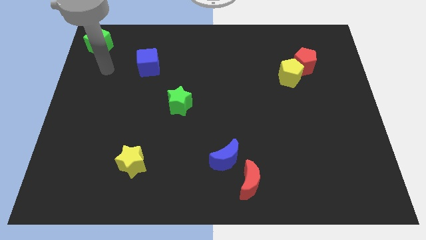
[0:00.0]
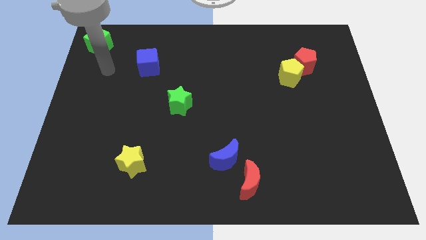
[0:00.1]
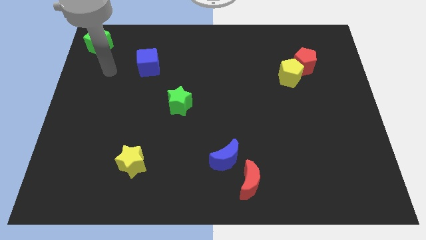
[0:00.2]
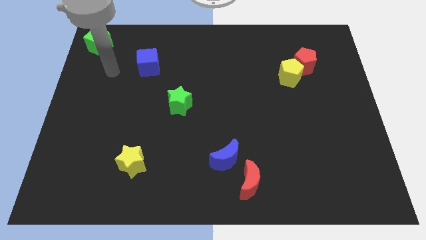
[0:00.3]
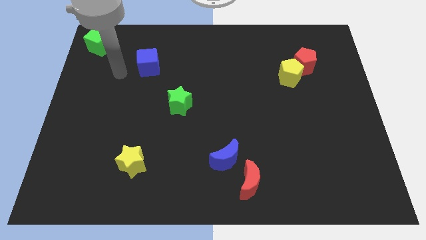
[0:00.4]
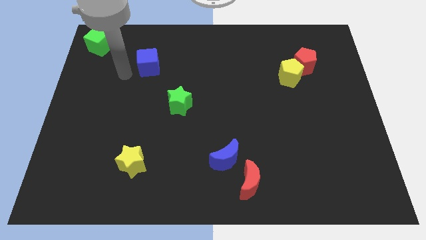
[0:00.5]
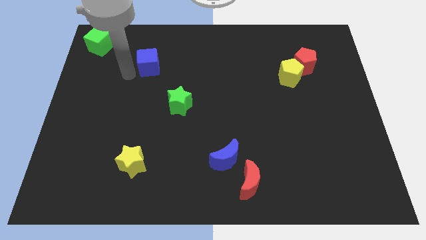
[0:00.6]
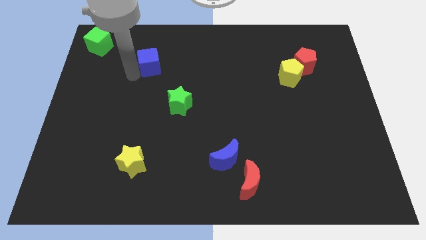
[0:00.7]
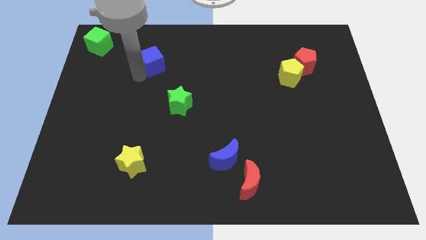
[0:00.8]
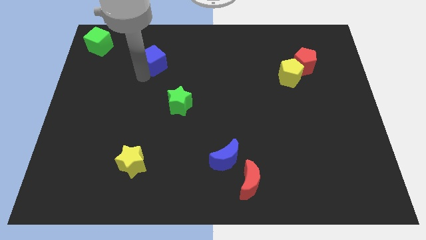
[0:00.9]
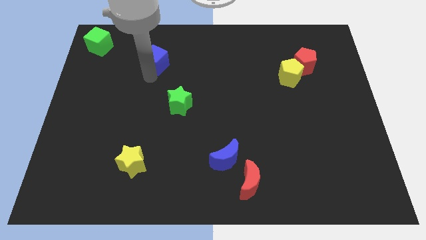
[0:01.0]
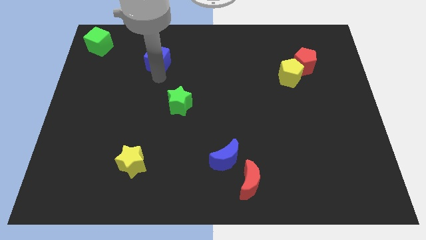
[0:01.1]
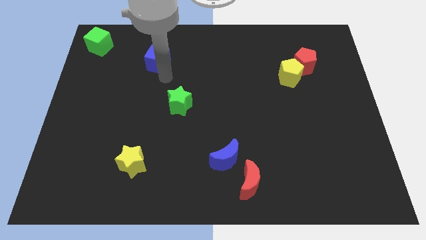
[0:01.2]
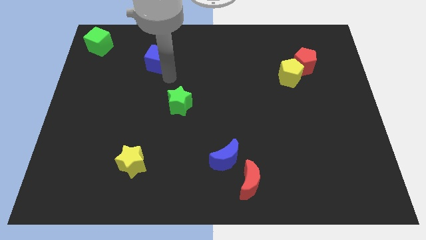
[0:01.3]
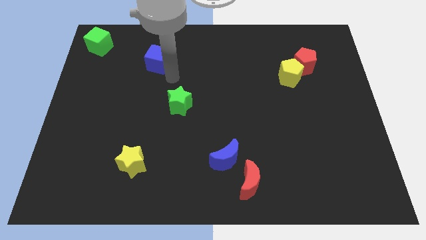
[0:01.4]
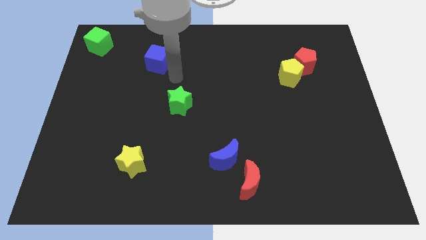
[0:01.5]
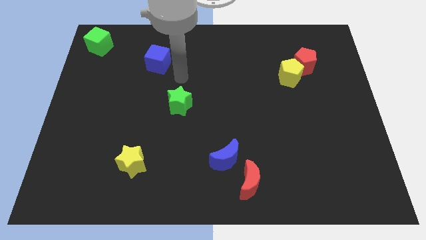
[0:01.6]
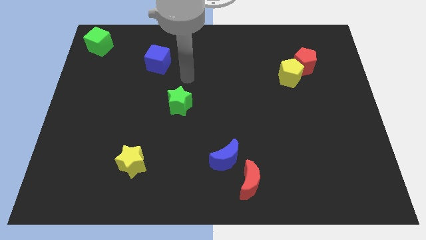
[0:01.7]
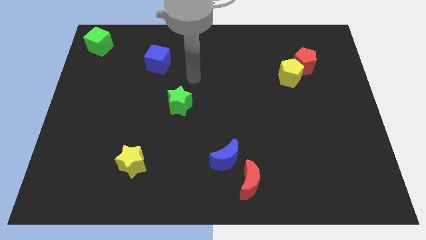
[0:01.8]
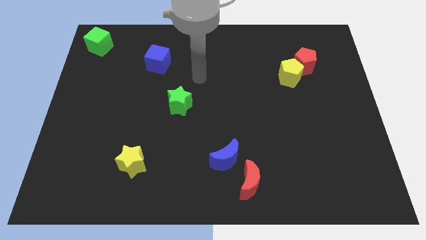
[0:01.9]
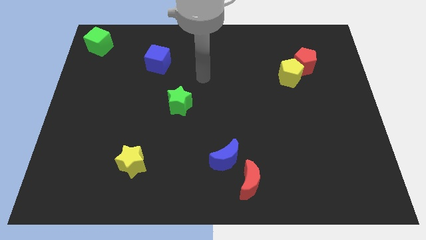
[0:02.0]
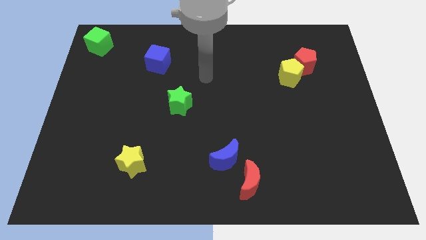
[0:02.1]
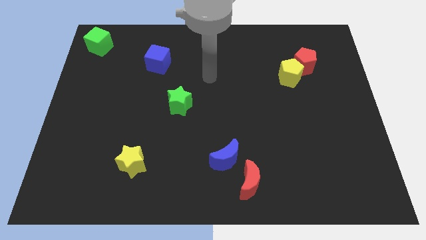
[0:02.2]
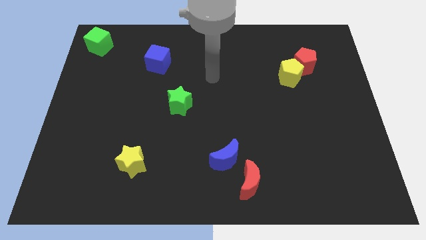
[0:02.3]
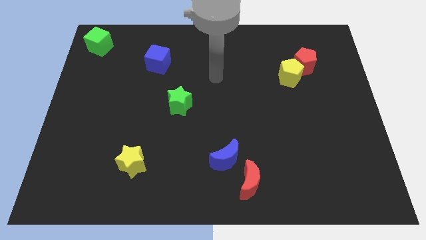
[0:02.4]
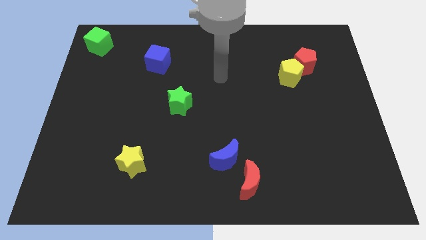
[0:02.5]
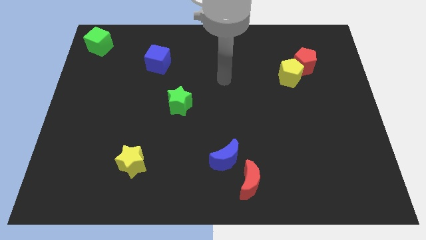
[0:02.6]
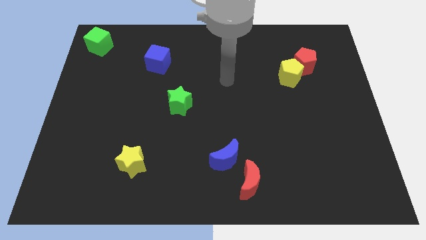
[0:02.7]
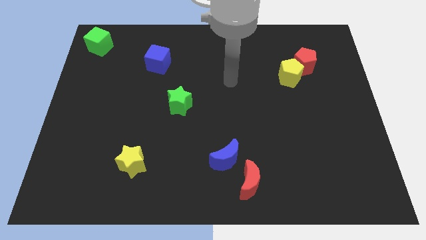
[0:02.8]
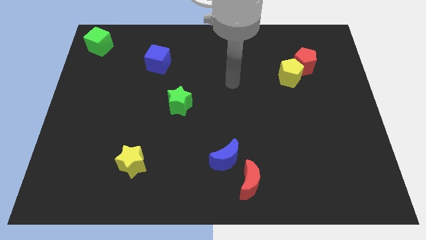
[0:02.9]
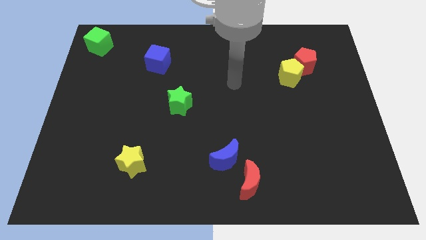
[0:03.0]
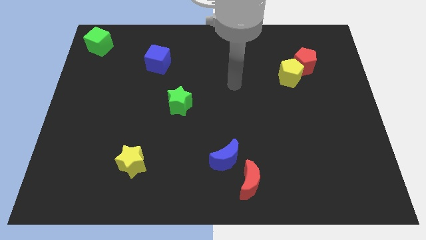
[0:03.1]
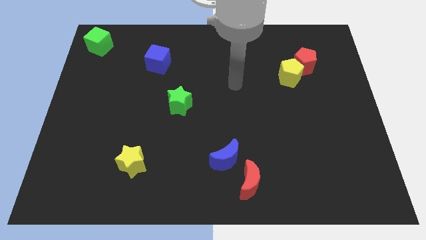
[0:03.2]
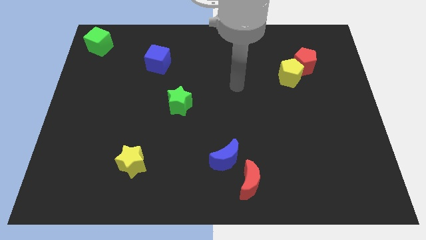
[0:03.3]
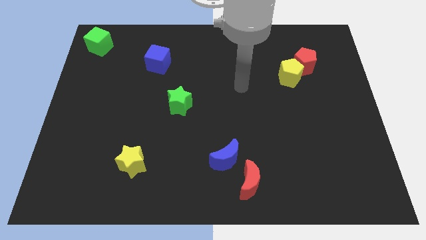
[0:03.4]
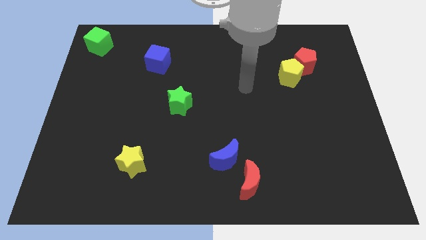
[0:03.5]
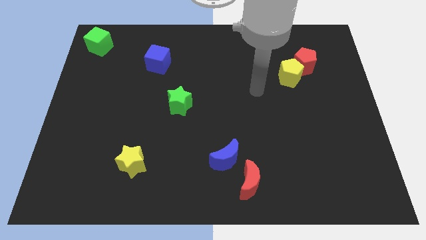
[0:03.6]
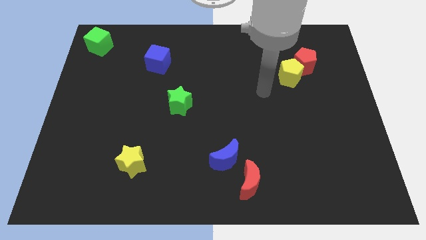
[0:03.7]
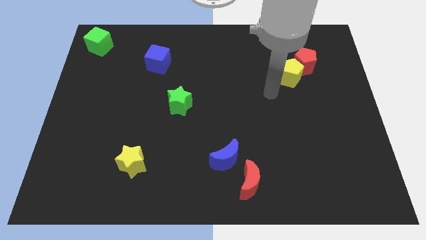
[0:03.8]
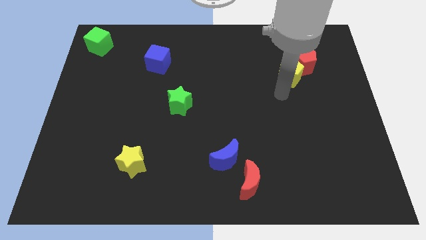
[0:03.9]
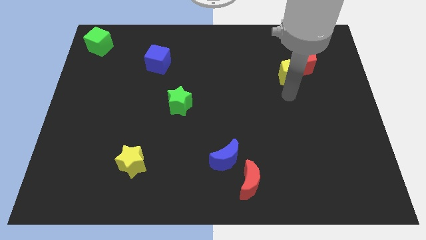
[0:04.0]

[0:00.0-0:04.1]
touch the blue cube

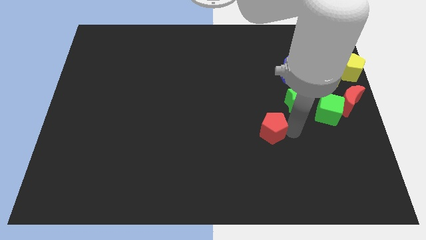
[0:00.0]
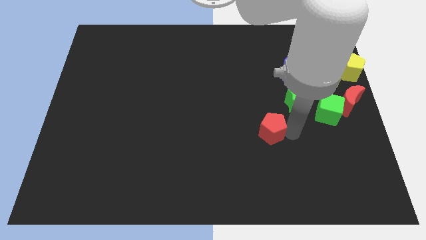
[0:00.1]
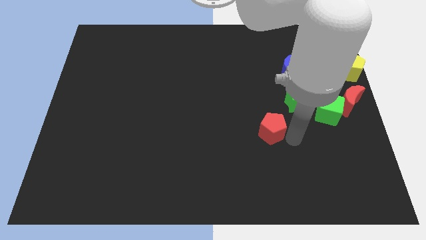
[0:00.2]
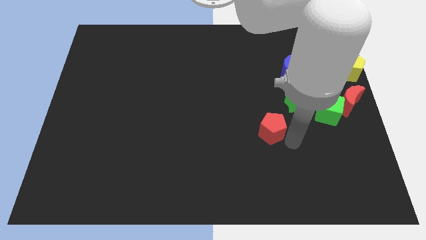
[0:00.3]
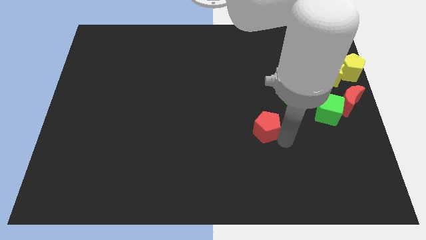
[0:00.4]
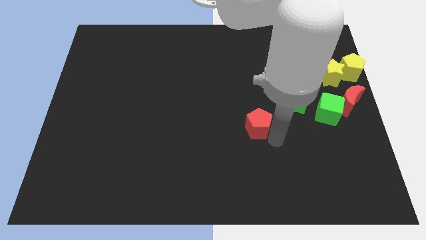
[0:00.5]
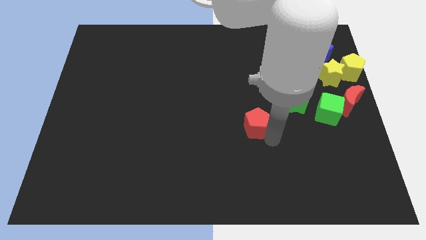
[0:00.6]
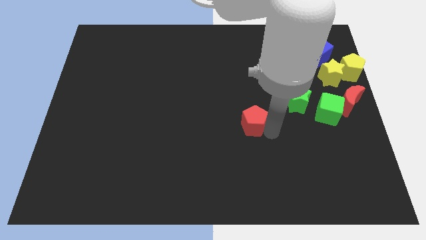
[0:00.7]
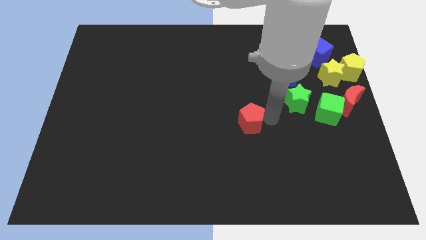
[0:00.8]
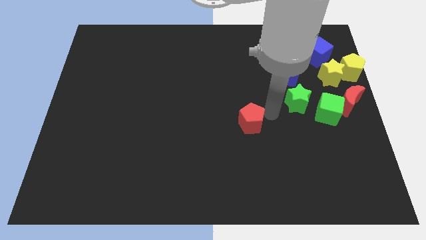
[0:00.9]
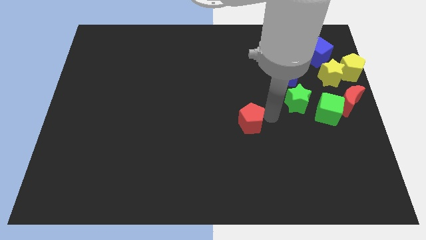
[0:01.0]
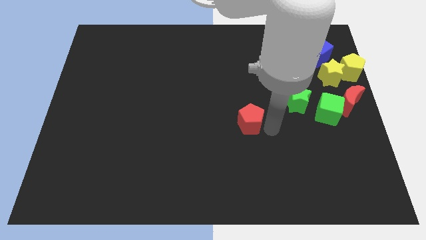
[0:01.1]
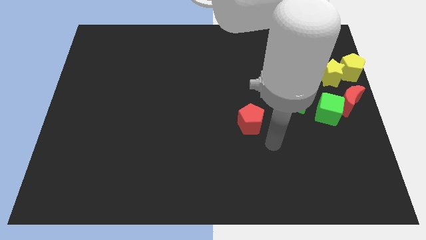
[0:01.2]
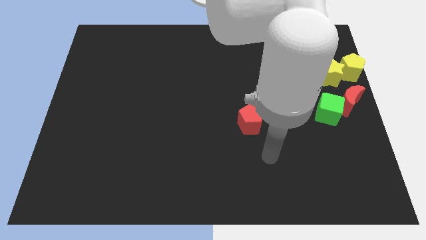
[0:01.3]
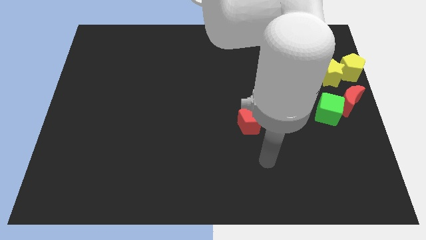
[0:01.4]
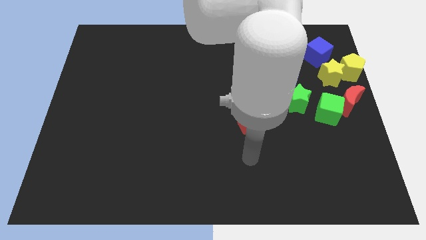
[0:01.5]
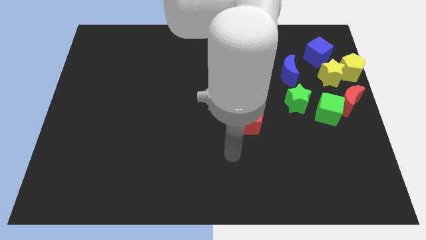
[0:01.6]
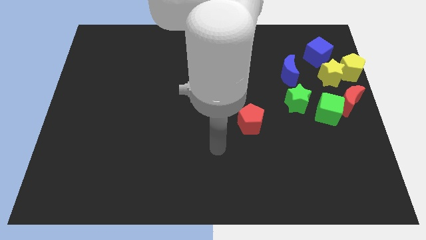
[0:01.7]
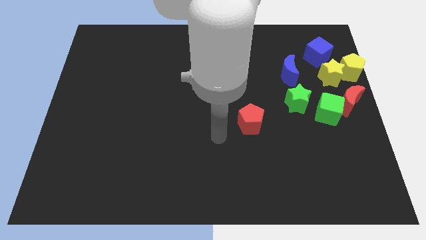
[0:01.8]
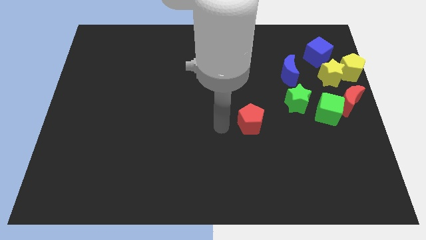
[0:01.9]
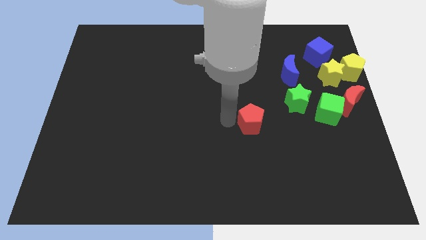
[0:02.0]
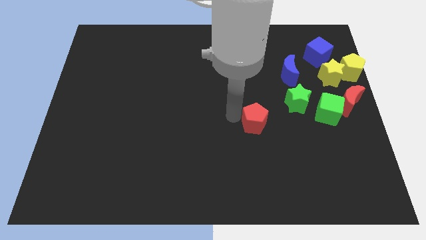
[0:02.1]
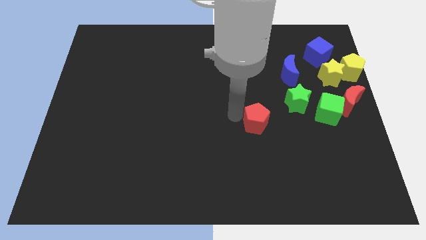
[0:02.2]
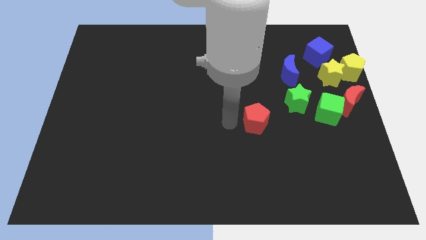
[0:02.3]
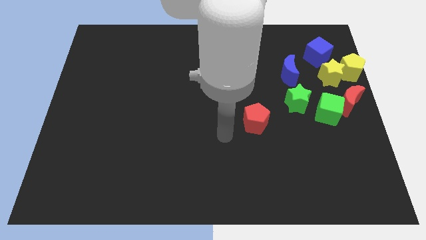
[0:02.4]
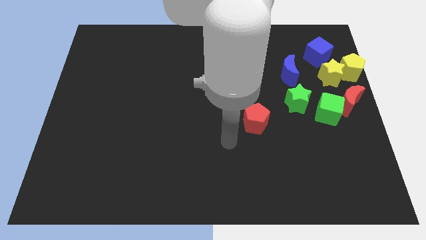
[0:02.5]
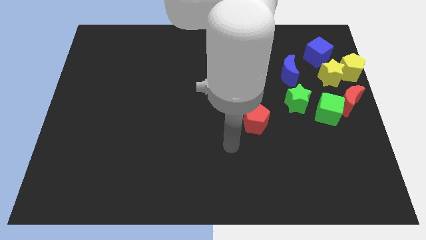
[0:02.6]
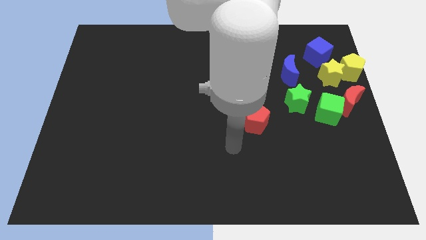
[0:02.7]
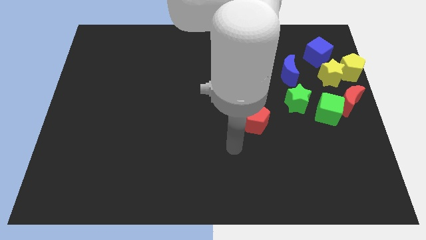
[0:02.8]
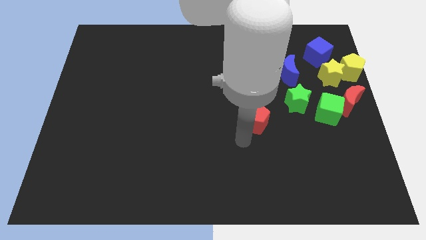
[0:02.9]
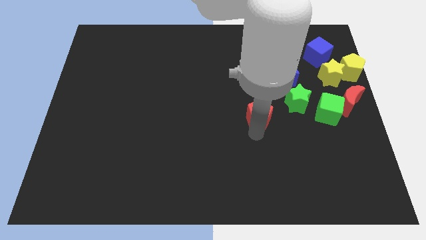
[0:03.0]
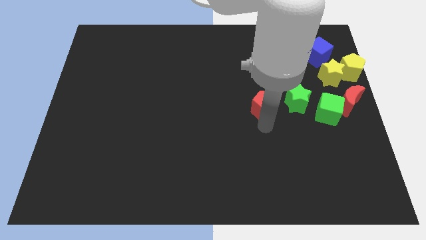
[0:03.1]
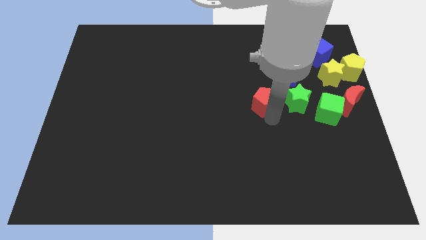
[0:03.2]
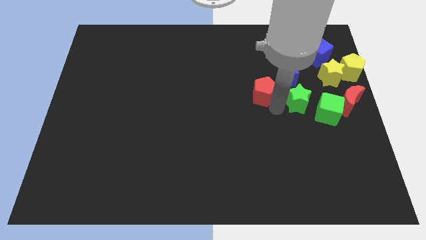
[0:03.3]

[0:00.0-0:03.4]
push red pentagon beside green star

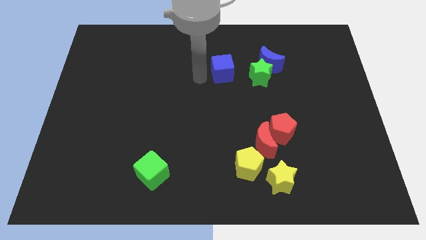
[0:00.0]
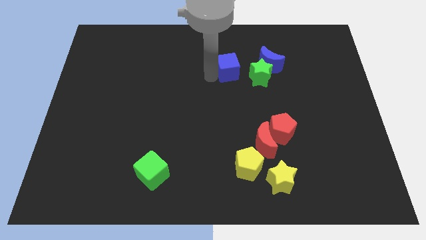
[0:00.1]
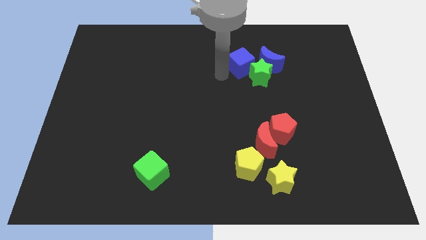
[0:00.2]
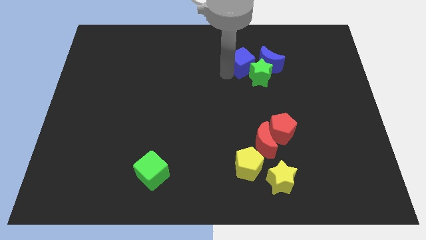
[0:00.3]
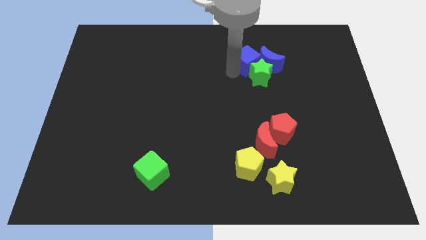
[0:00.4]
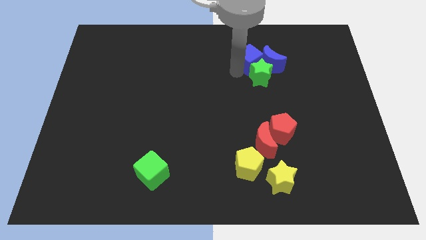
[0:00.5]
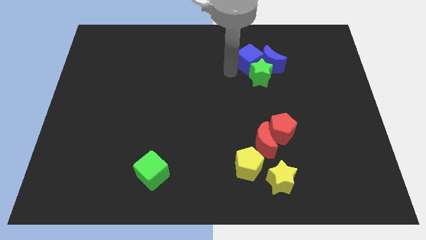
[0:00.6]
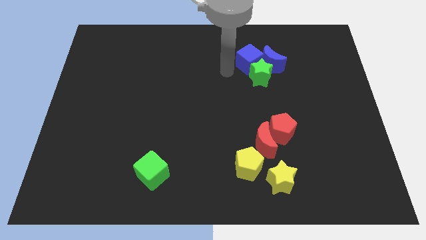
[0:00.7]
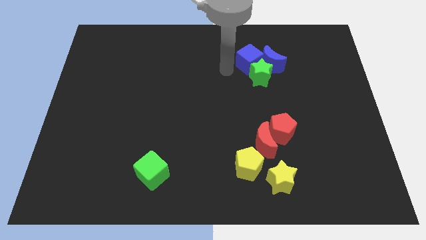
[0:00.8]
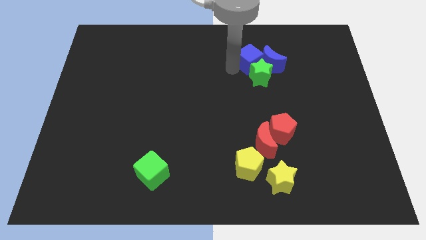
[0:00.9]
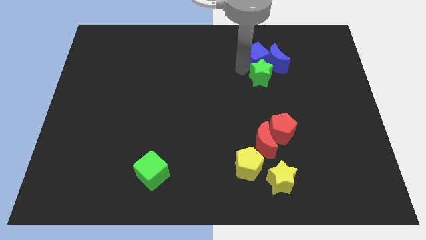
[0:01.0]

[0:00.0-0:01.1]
move the blue cube into the blue moon

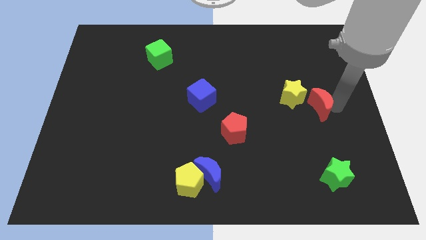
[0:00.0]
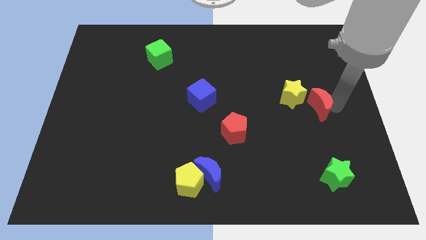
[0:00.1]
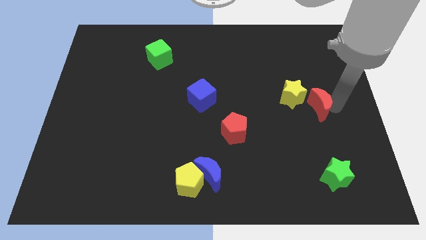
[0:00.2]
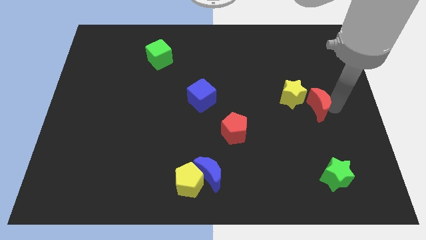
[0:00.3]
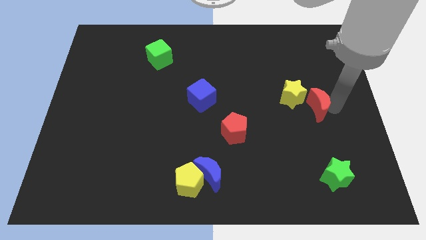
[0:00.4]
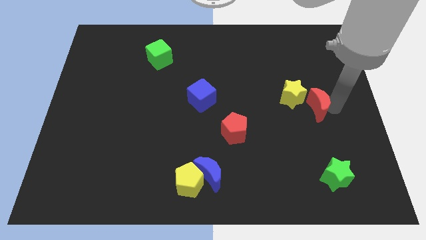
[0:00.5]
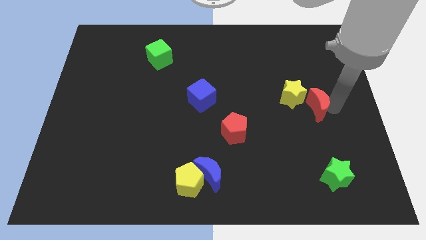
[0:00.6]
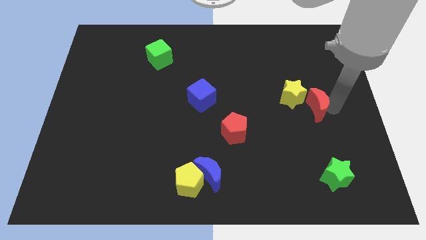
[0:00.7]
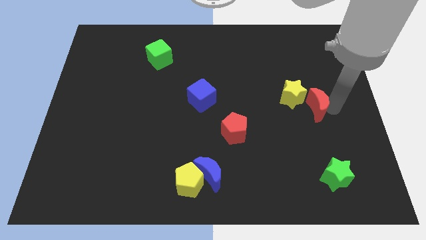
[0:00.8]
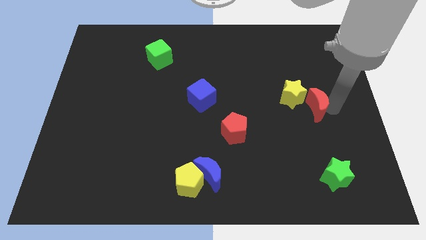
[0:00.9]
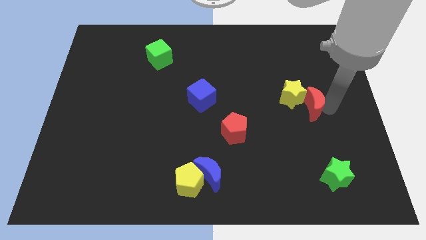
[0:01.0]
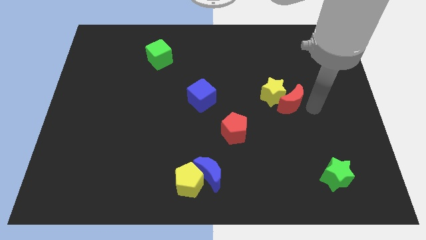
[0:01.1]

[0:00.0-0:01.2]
move the red crescent into the yellow star
